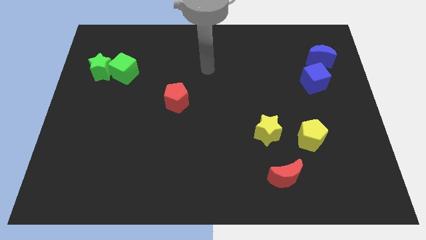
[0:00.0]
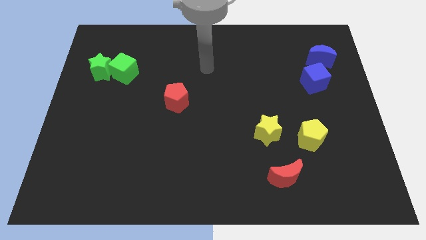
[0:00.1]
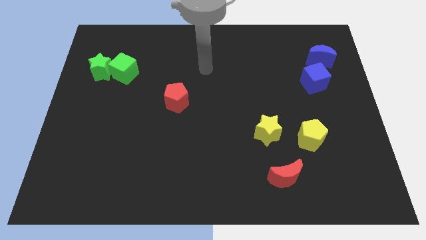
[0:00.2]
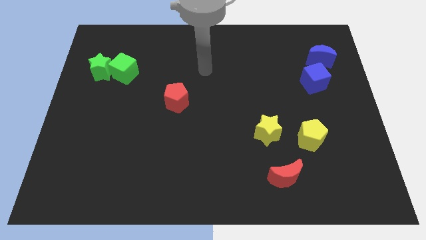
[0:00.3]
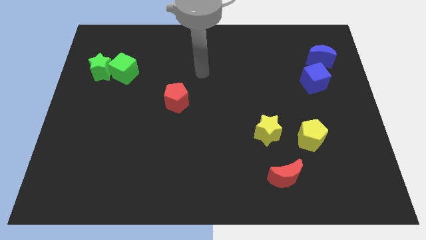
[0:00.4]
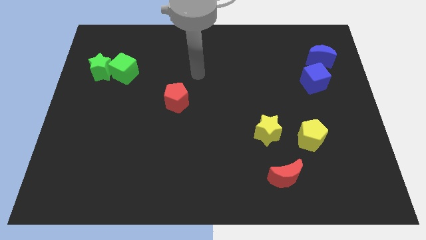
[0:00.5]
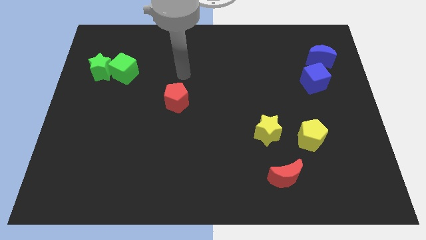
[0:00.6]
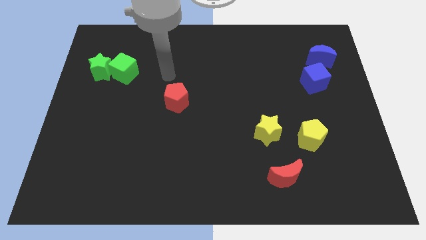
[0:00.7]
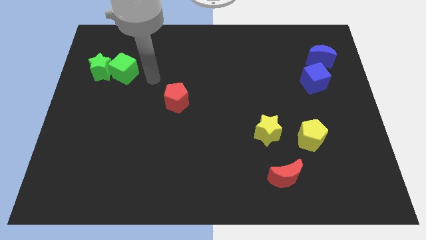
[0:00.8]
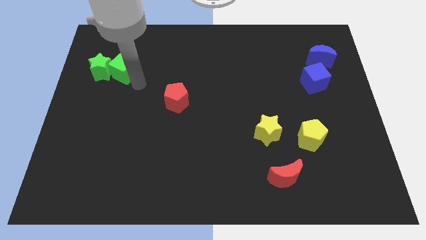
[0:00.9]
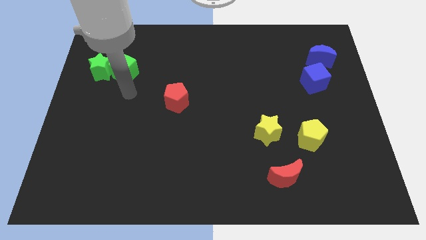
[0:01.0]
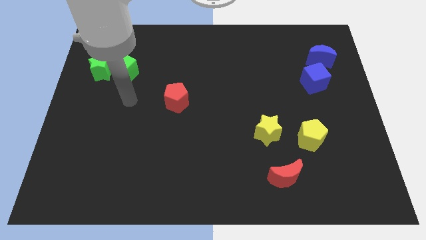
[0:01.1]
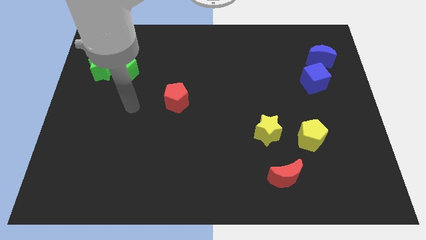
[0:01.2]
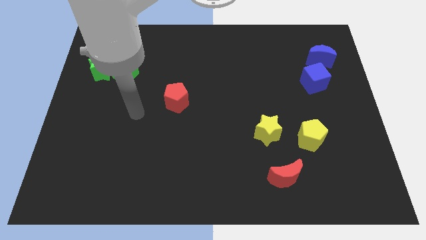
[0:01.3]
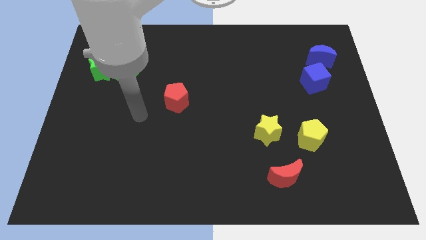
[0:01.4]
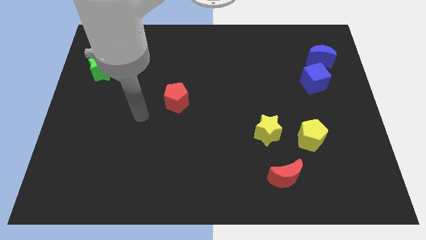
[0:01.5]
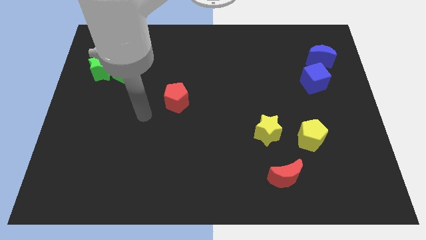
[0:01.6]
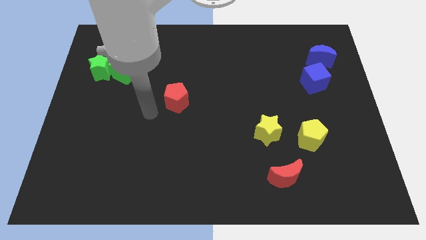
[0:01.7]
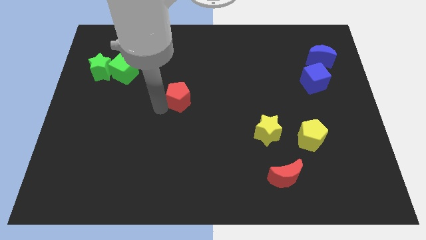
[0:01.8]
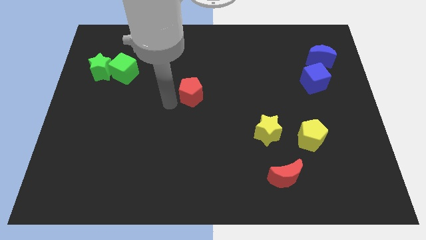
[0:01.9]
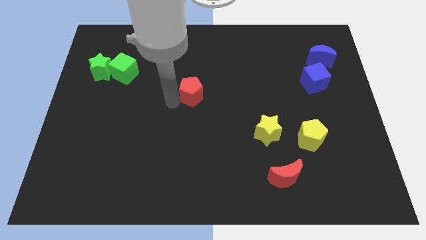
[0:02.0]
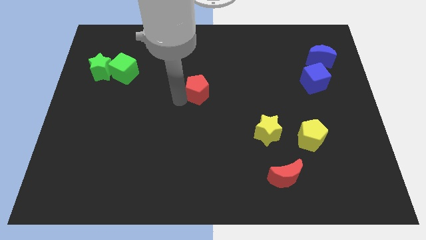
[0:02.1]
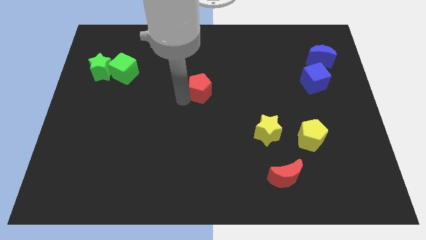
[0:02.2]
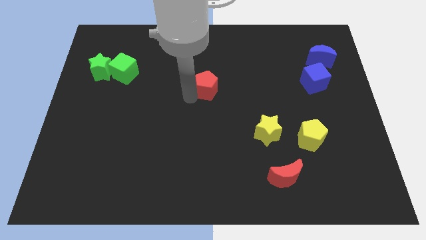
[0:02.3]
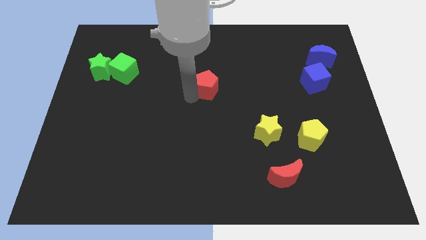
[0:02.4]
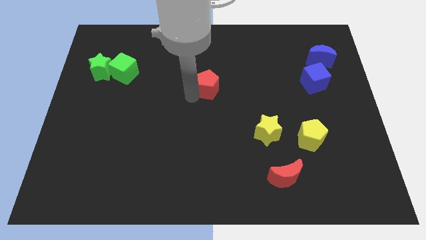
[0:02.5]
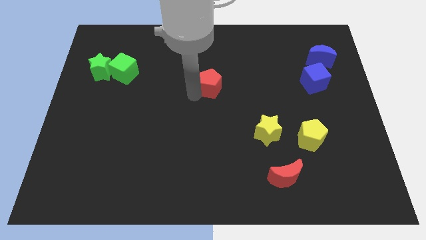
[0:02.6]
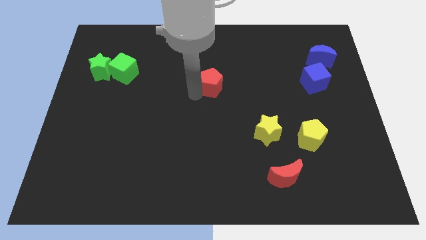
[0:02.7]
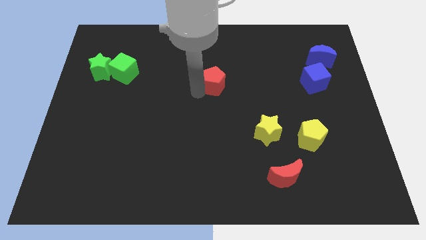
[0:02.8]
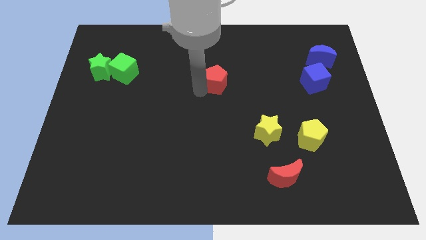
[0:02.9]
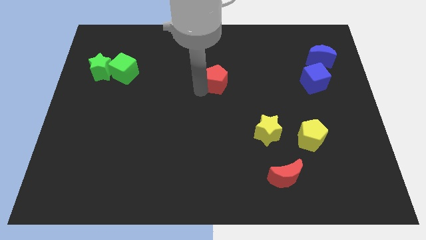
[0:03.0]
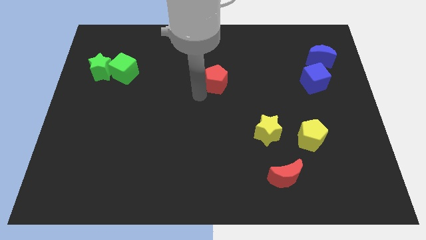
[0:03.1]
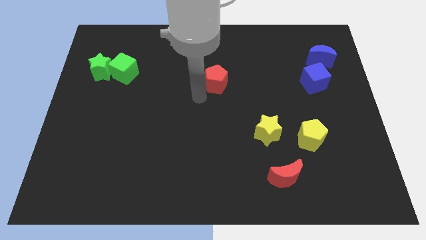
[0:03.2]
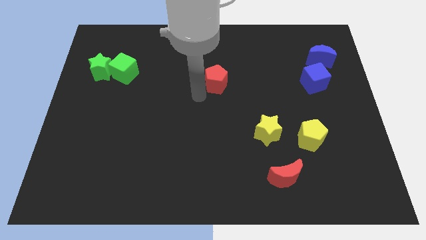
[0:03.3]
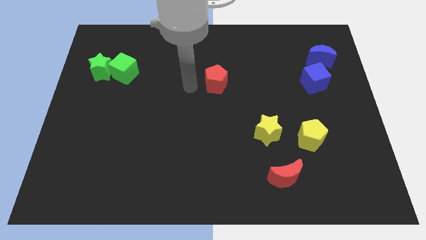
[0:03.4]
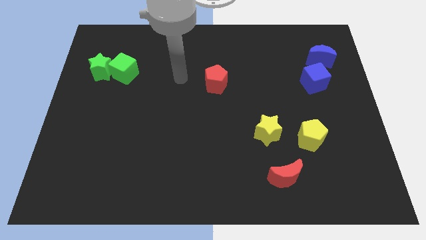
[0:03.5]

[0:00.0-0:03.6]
move the red pentagon towards the top center

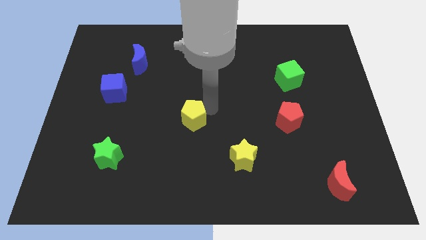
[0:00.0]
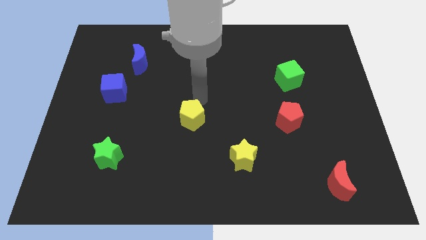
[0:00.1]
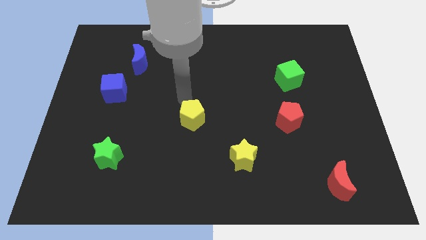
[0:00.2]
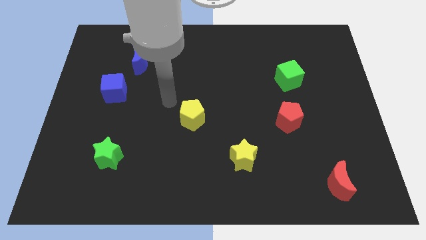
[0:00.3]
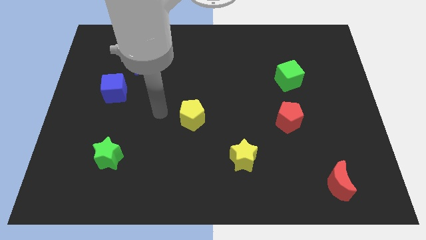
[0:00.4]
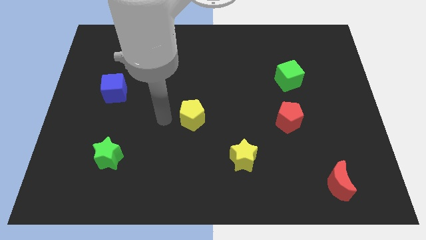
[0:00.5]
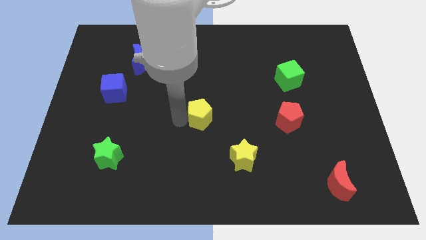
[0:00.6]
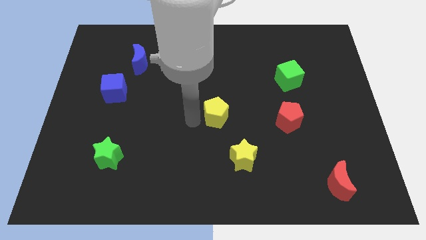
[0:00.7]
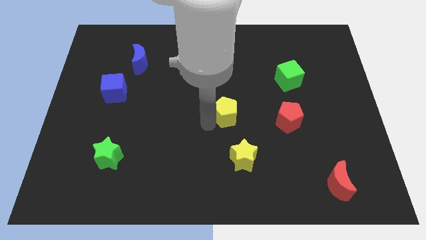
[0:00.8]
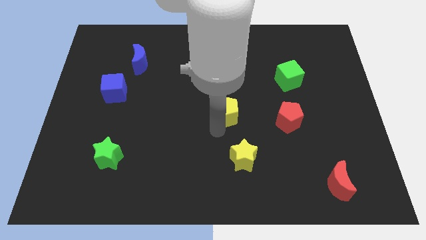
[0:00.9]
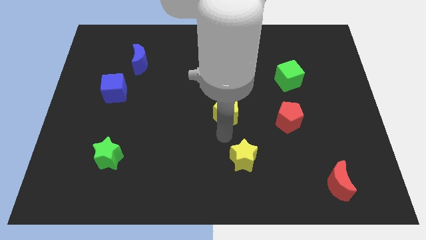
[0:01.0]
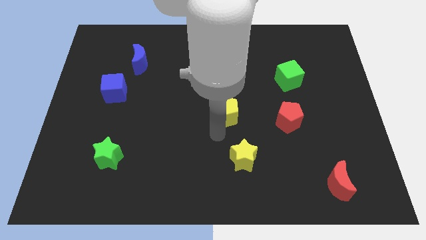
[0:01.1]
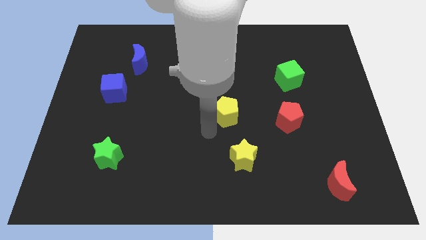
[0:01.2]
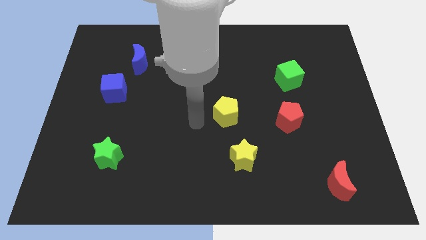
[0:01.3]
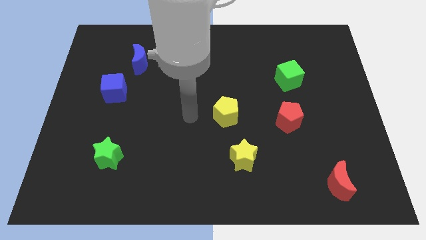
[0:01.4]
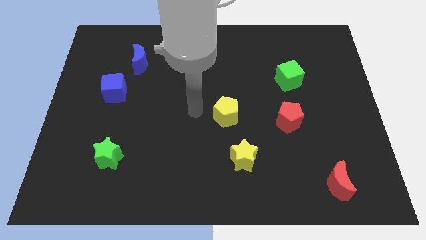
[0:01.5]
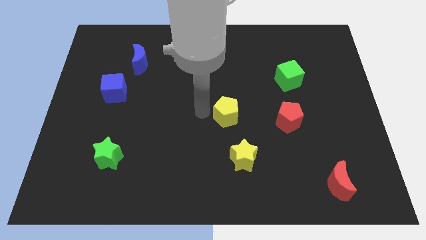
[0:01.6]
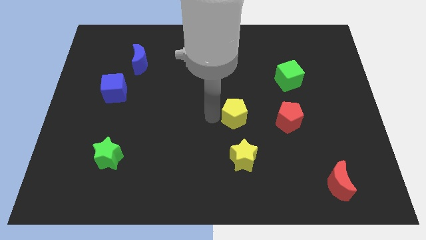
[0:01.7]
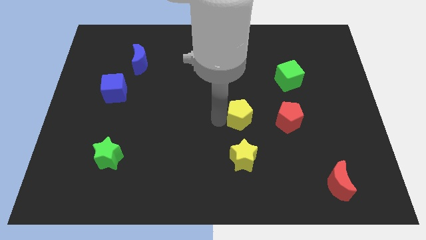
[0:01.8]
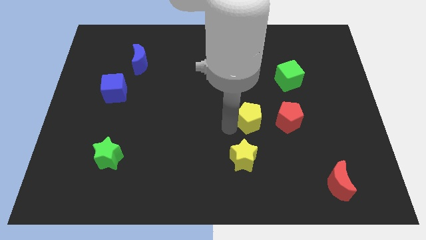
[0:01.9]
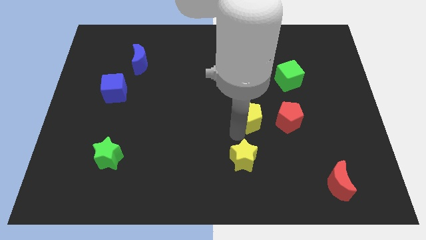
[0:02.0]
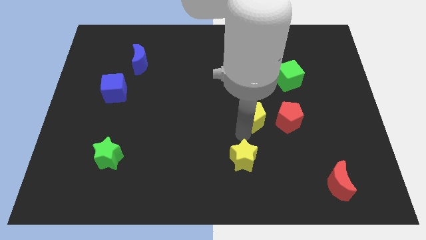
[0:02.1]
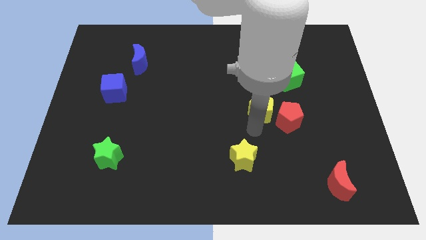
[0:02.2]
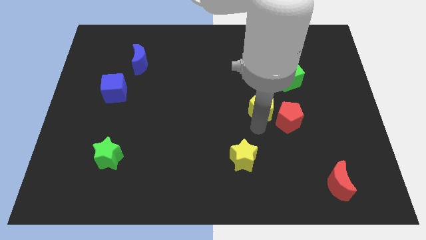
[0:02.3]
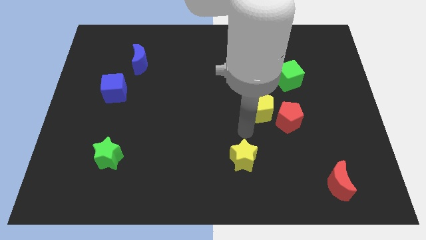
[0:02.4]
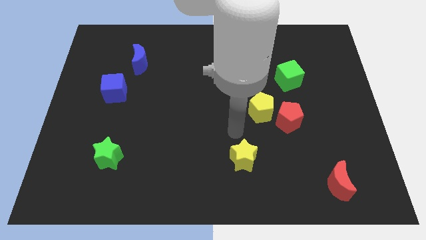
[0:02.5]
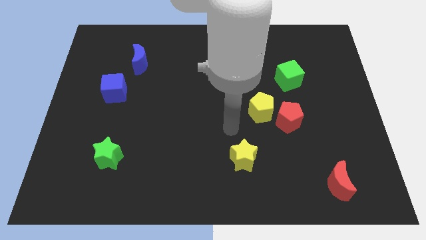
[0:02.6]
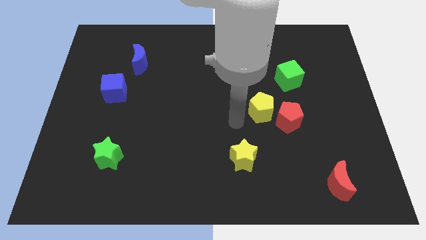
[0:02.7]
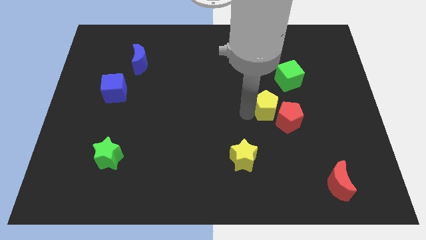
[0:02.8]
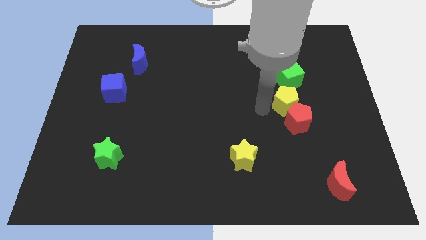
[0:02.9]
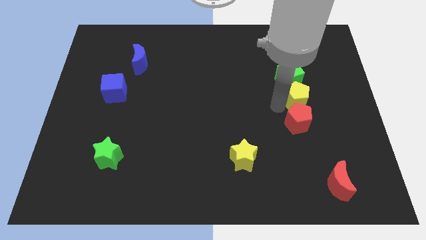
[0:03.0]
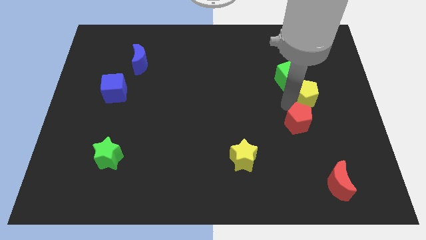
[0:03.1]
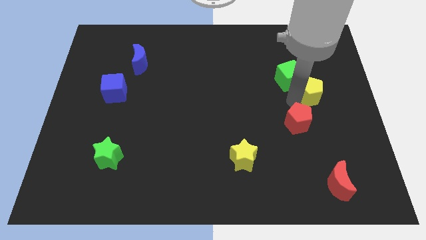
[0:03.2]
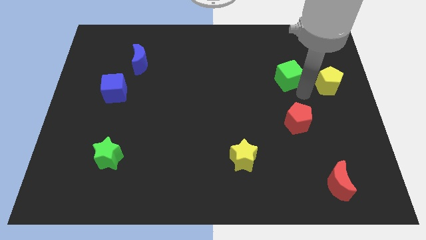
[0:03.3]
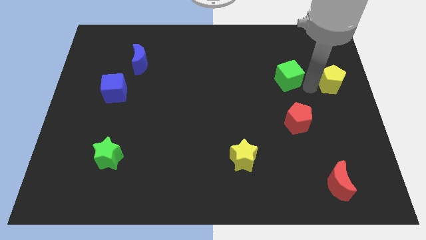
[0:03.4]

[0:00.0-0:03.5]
put the yellow pentagon to the right of the green cube

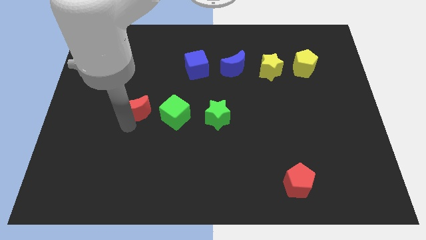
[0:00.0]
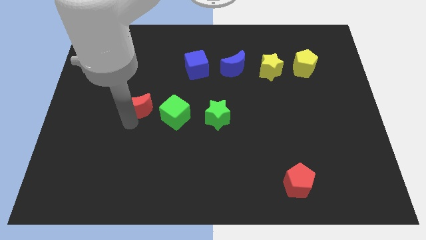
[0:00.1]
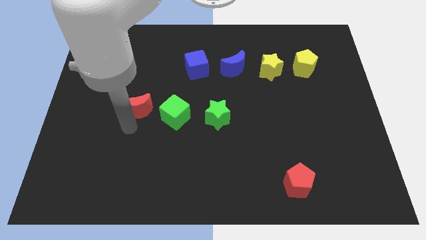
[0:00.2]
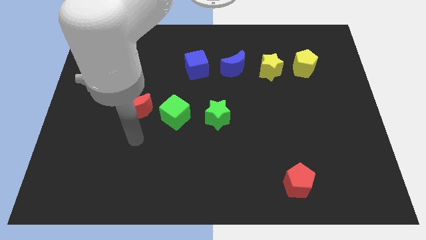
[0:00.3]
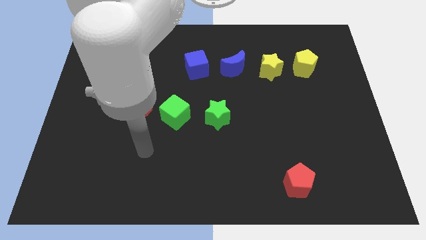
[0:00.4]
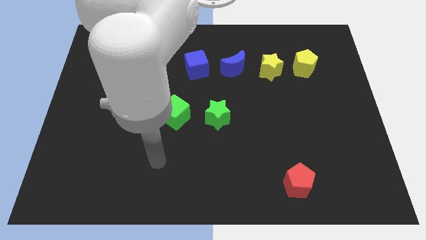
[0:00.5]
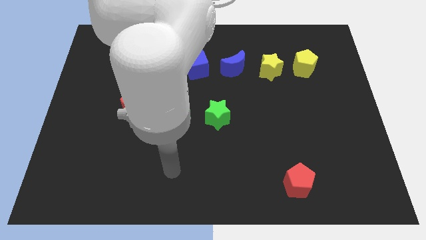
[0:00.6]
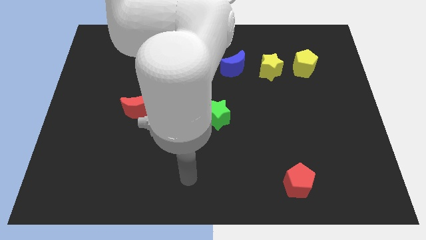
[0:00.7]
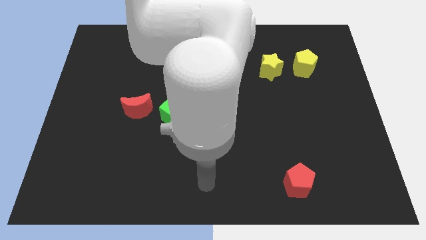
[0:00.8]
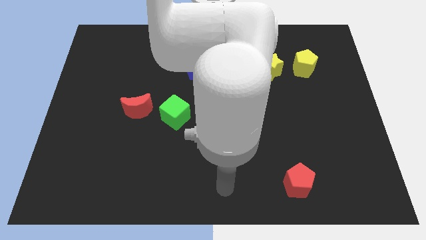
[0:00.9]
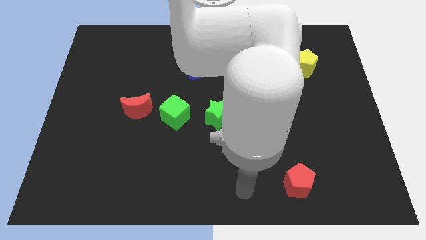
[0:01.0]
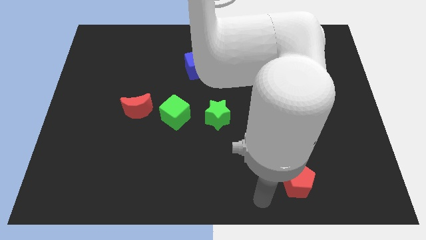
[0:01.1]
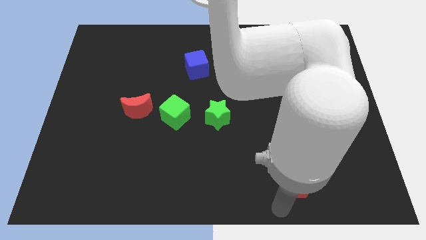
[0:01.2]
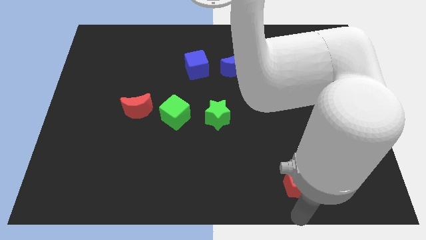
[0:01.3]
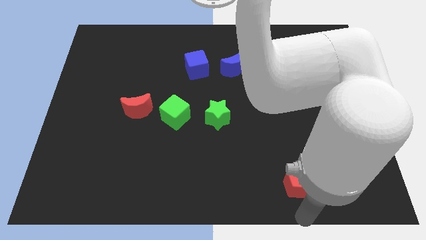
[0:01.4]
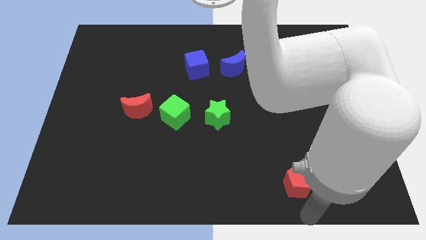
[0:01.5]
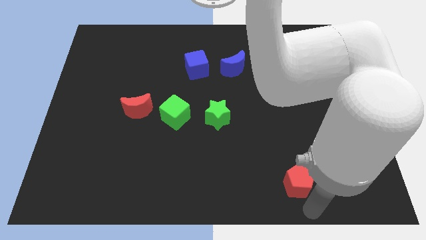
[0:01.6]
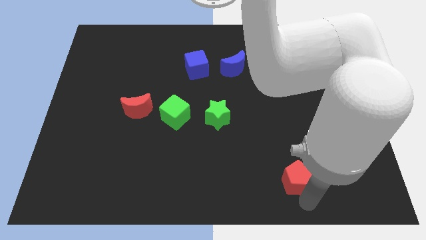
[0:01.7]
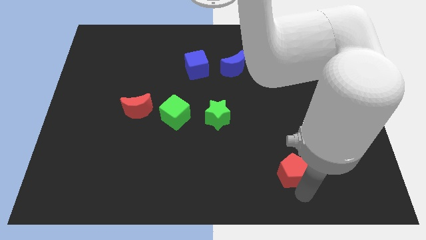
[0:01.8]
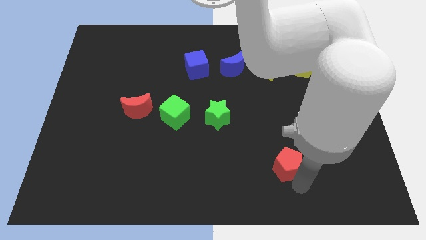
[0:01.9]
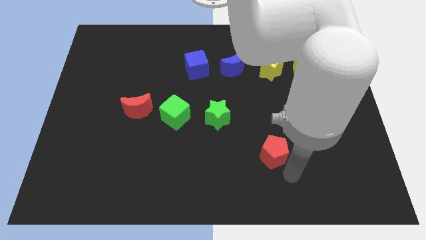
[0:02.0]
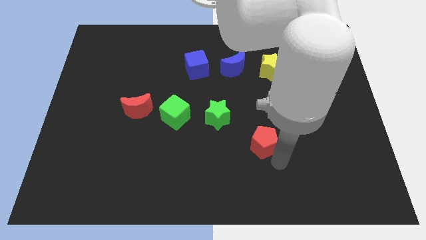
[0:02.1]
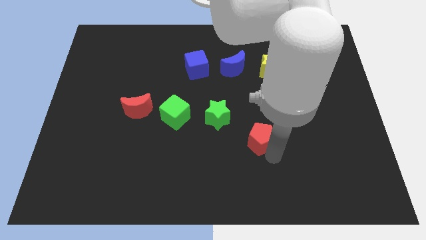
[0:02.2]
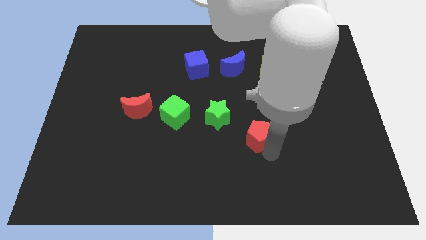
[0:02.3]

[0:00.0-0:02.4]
push red pentagon diagonally below green star
